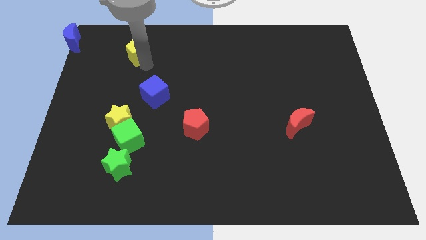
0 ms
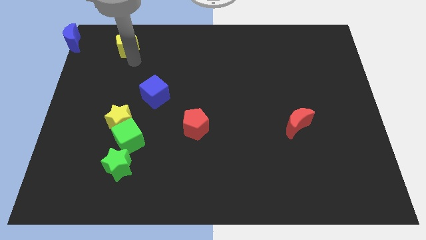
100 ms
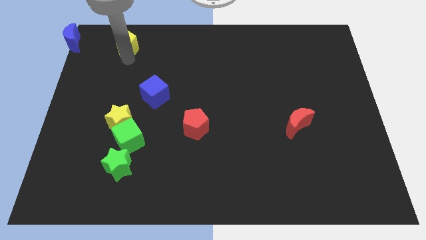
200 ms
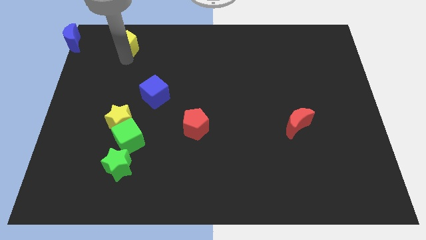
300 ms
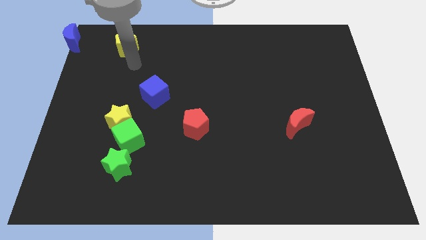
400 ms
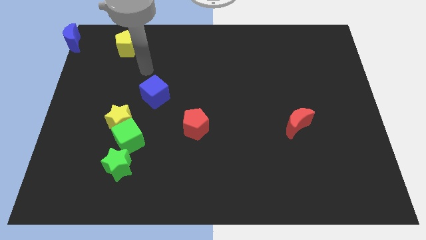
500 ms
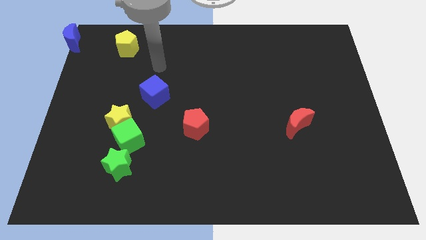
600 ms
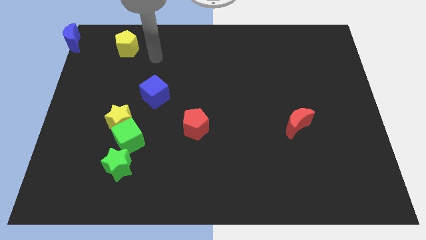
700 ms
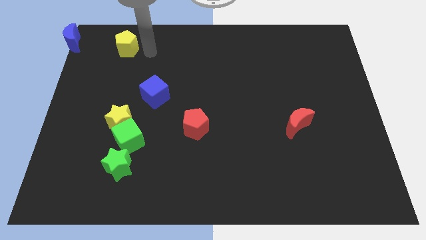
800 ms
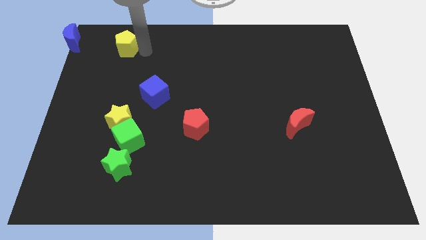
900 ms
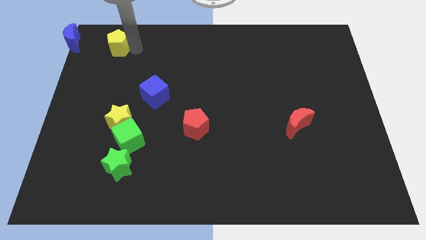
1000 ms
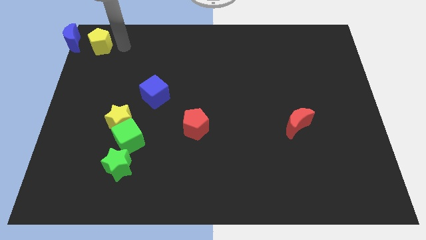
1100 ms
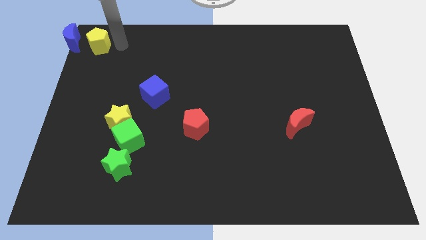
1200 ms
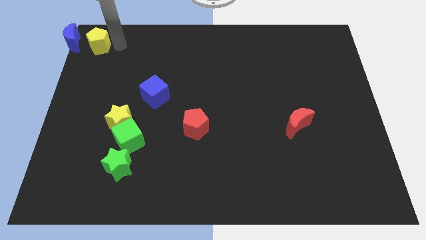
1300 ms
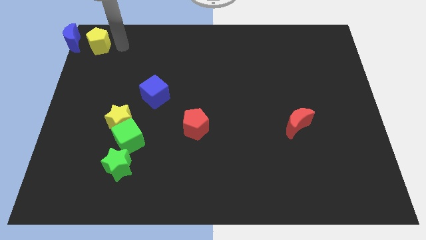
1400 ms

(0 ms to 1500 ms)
move the yellow pentagon towards the blue moon

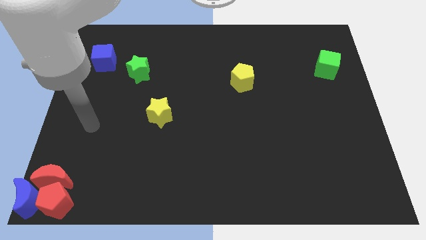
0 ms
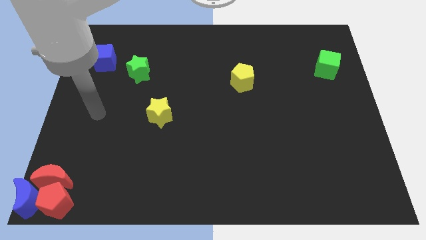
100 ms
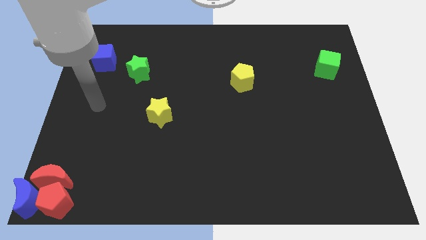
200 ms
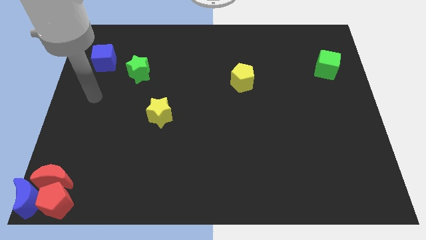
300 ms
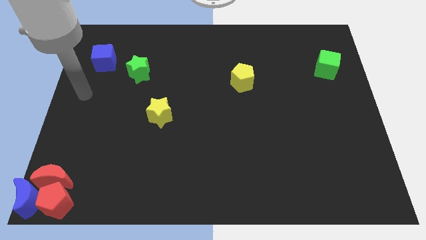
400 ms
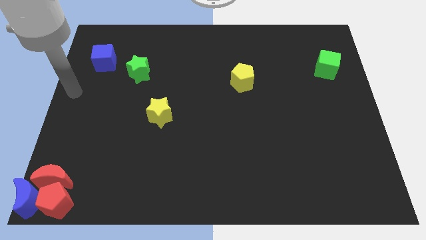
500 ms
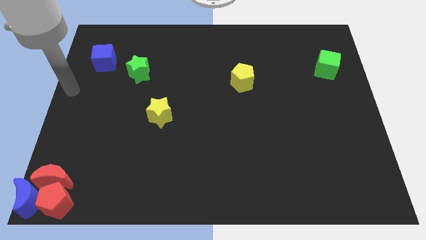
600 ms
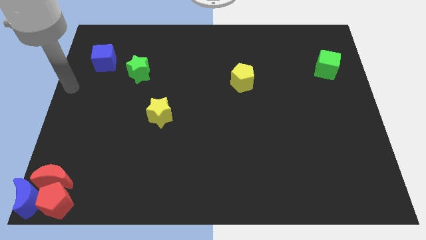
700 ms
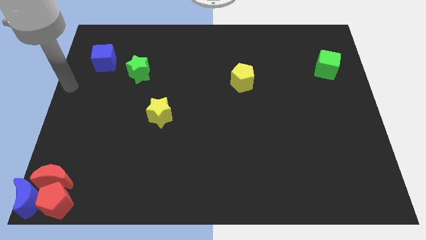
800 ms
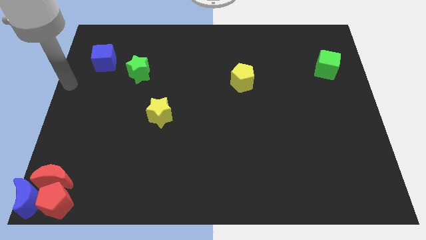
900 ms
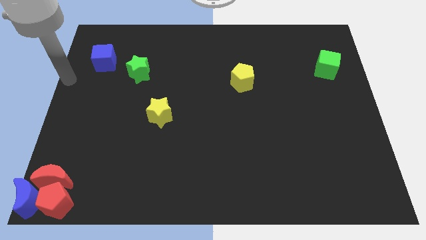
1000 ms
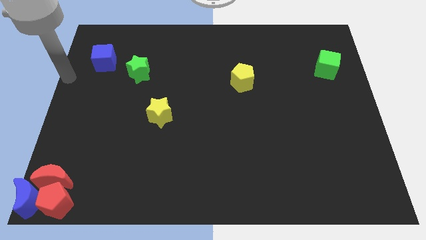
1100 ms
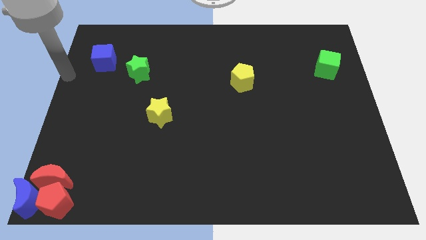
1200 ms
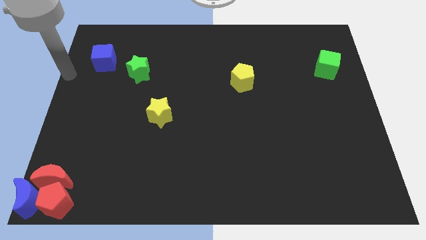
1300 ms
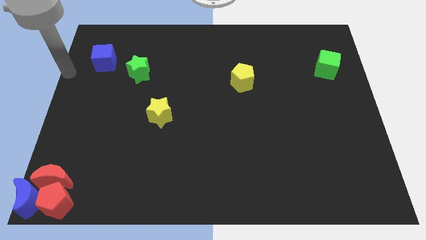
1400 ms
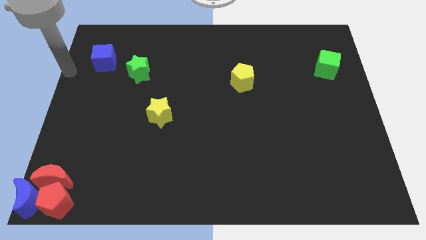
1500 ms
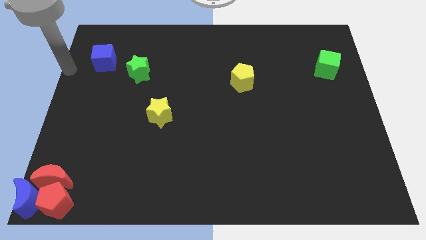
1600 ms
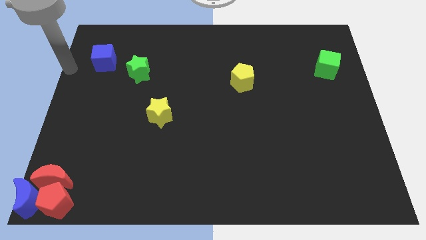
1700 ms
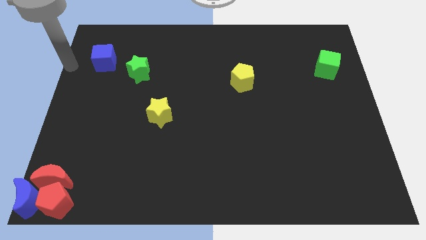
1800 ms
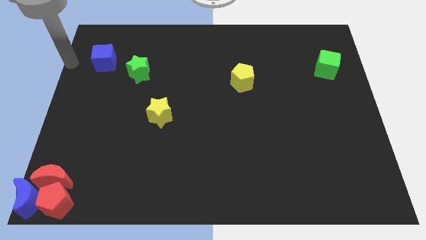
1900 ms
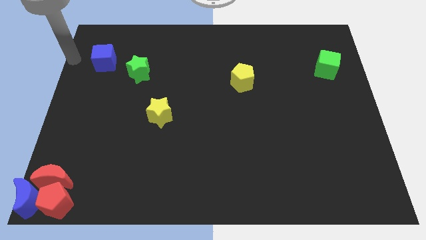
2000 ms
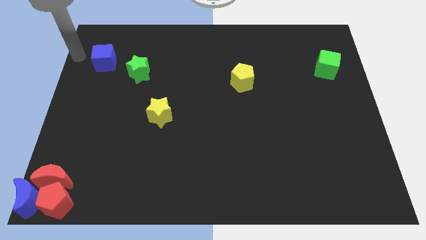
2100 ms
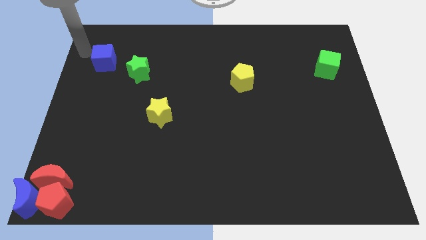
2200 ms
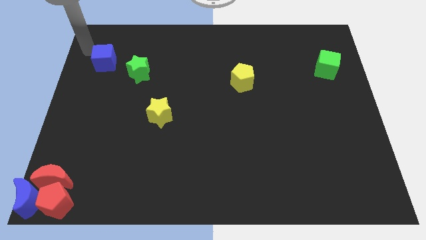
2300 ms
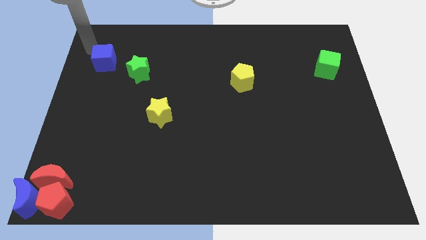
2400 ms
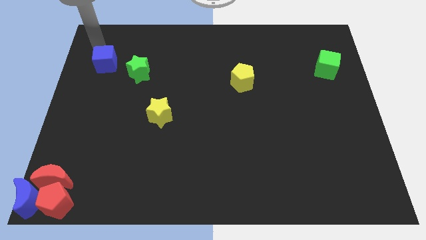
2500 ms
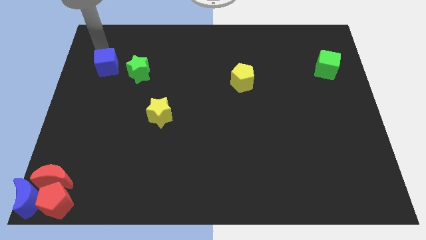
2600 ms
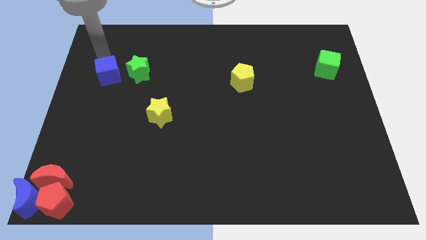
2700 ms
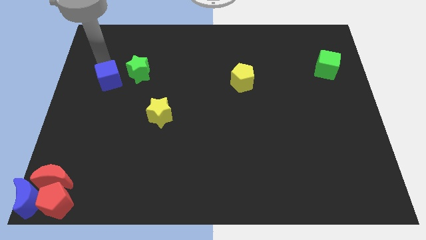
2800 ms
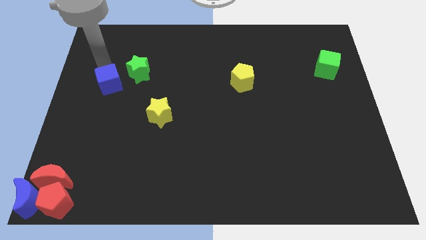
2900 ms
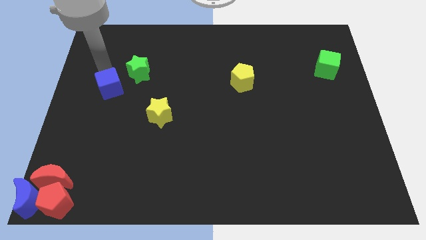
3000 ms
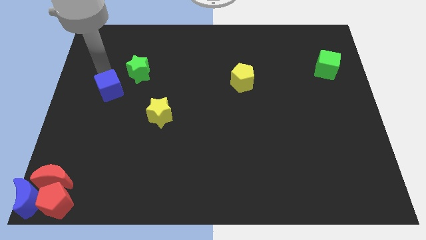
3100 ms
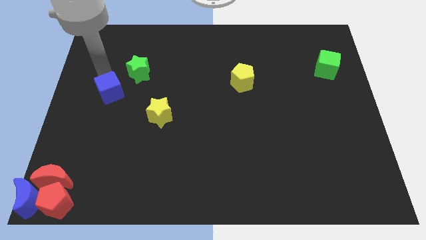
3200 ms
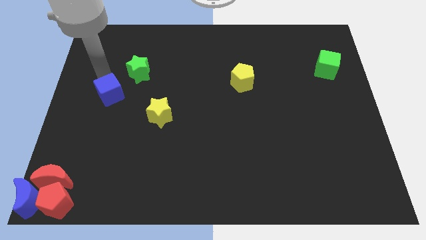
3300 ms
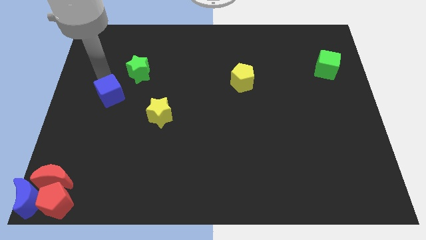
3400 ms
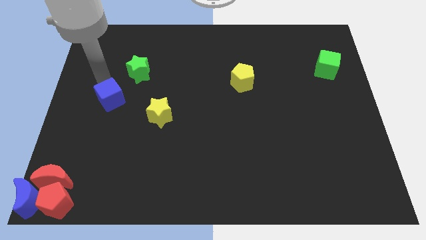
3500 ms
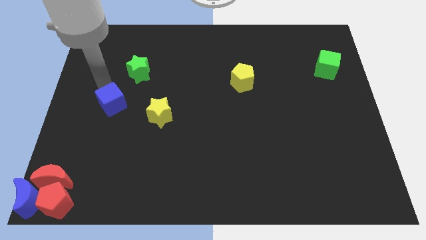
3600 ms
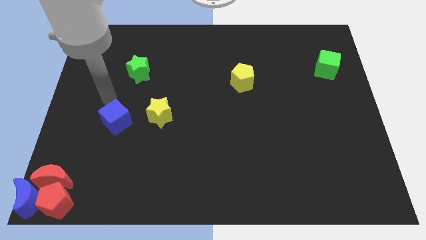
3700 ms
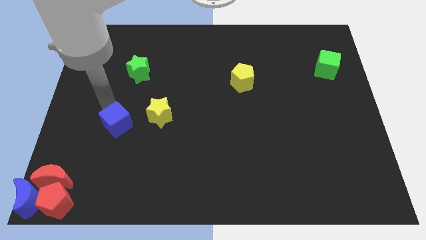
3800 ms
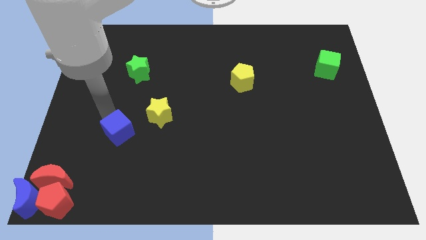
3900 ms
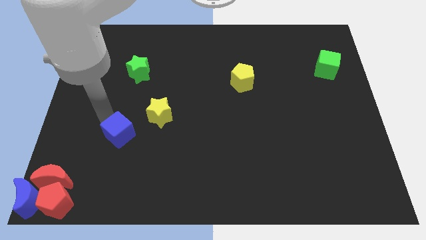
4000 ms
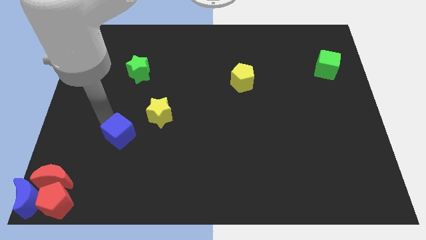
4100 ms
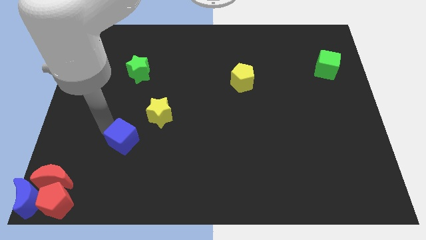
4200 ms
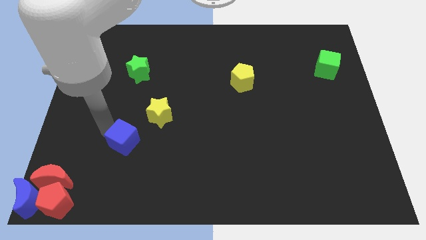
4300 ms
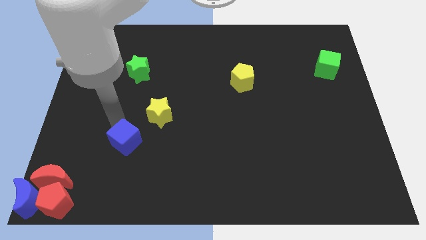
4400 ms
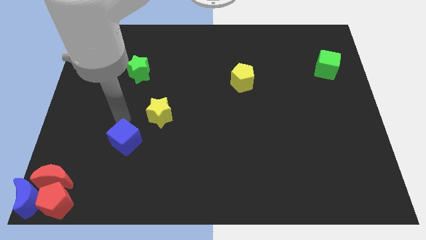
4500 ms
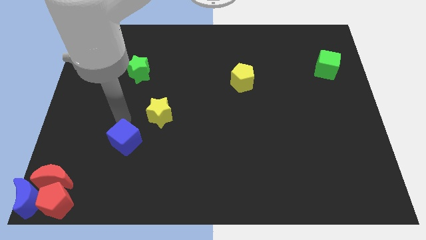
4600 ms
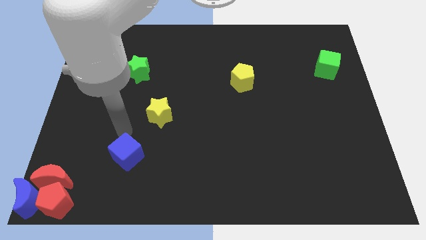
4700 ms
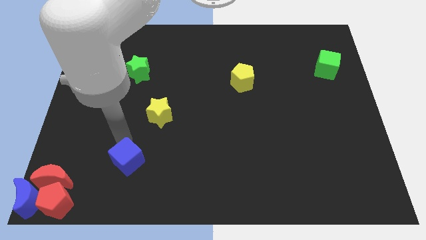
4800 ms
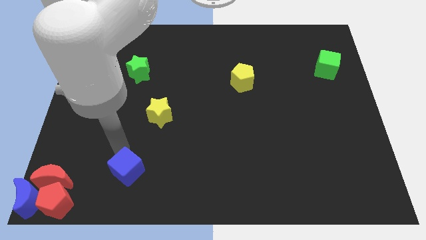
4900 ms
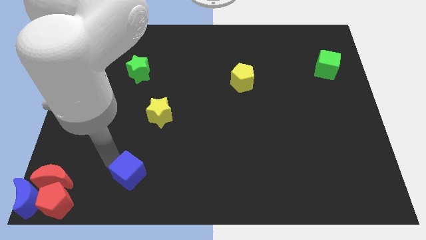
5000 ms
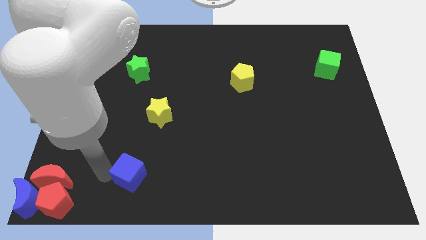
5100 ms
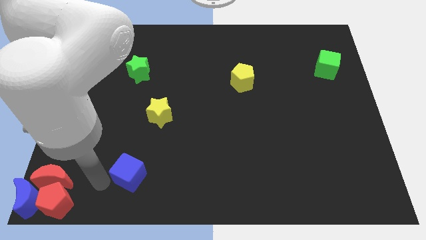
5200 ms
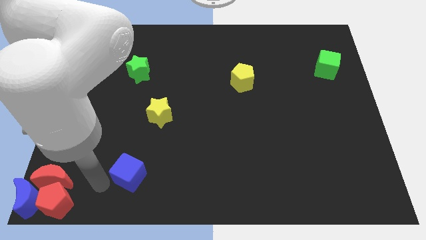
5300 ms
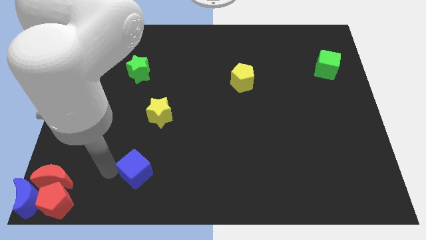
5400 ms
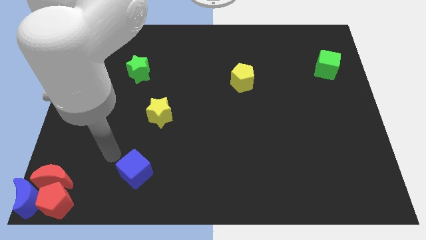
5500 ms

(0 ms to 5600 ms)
place the blue moon parallel right to the red moon

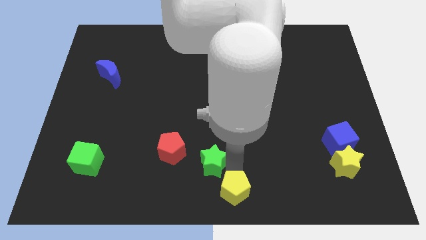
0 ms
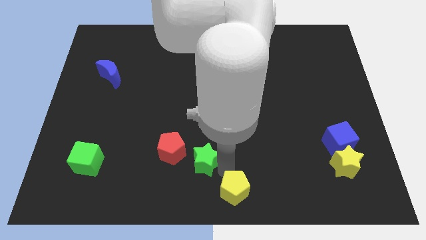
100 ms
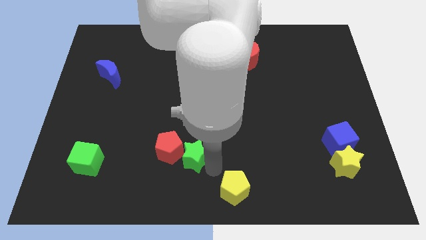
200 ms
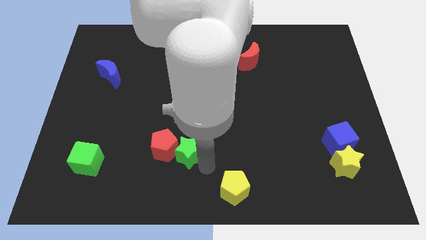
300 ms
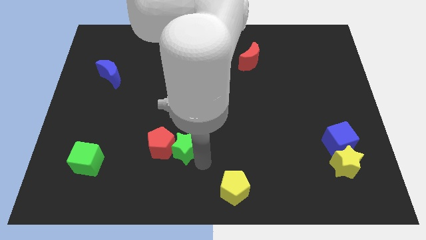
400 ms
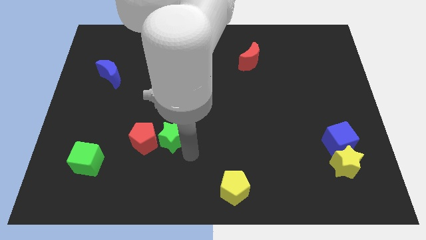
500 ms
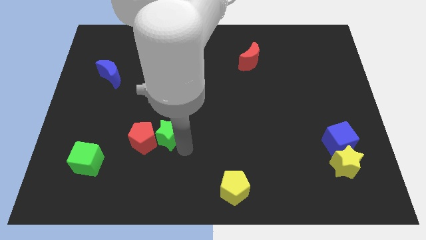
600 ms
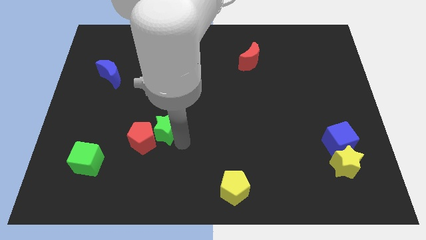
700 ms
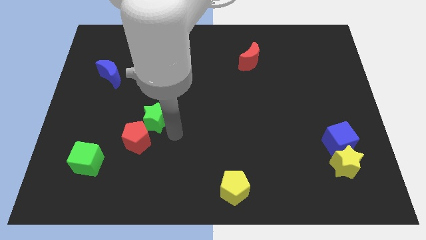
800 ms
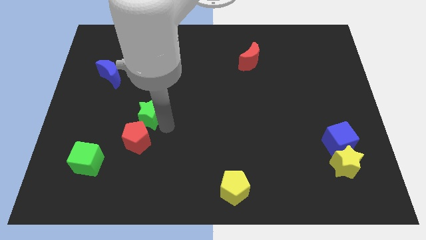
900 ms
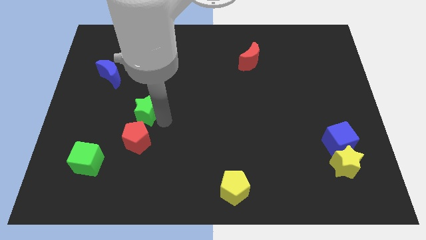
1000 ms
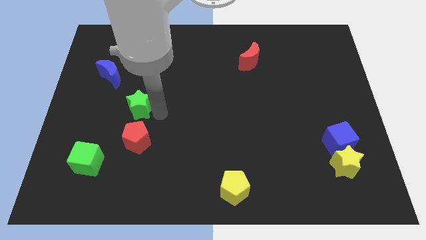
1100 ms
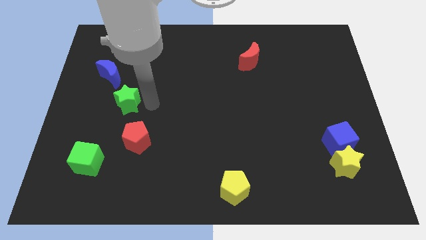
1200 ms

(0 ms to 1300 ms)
place the green star vertically above the red pentagon

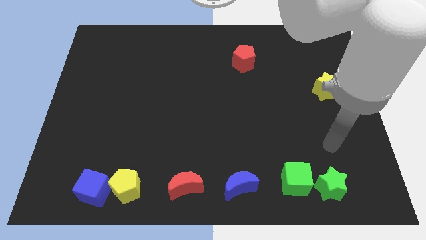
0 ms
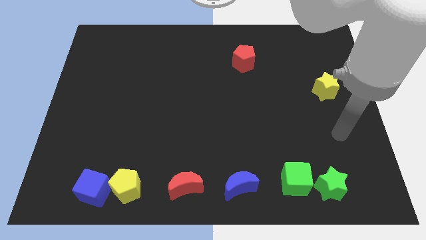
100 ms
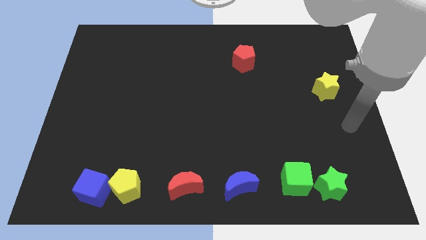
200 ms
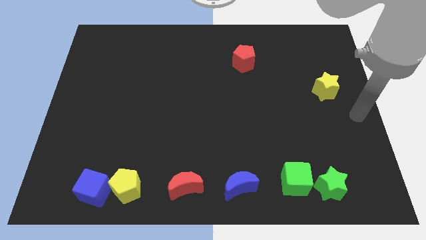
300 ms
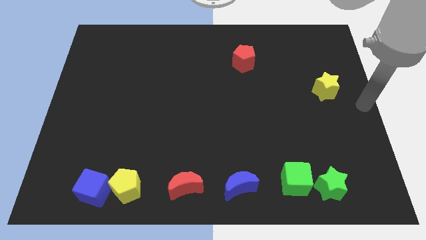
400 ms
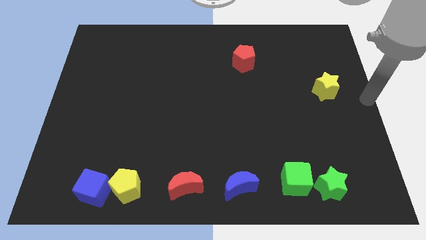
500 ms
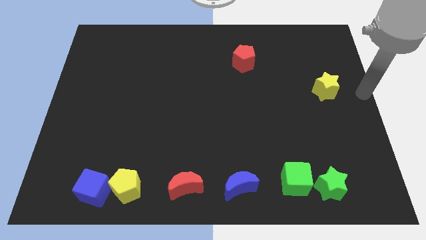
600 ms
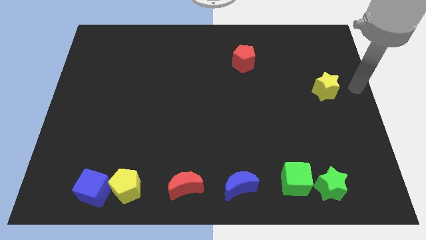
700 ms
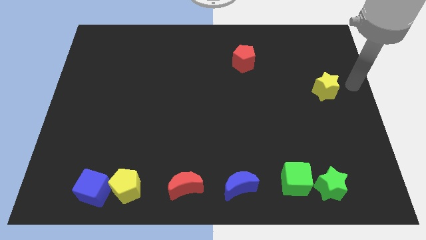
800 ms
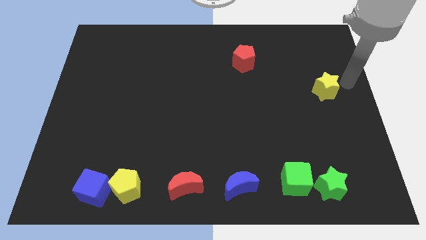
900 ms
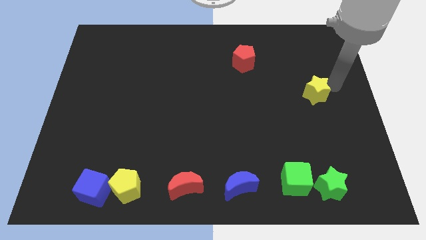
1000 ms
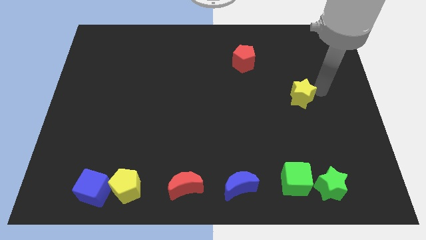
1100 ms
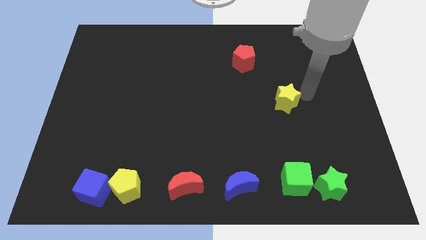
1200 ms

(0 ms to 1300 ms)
place the yellow star vertically above the green cube
